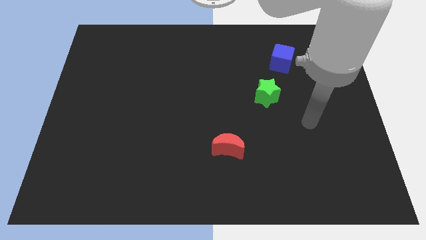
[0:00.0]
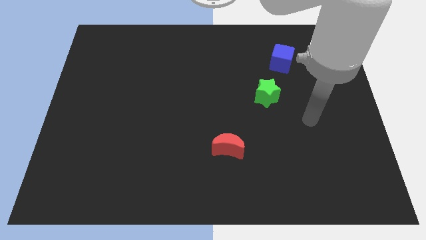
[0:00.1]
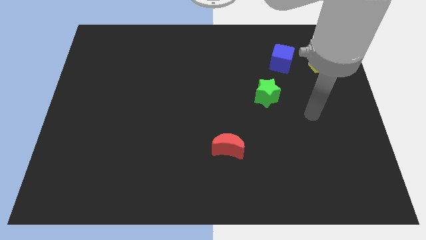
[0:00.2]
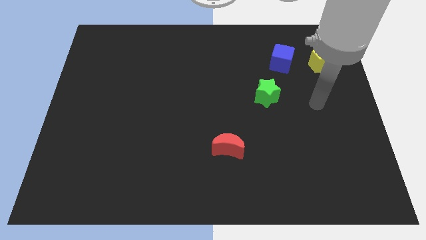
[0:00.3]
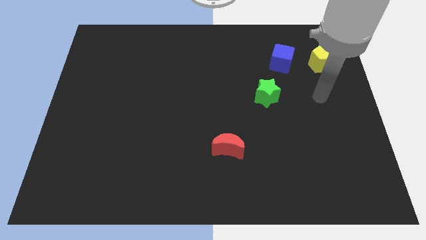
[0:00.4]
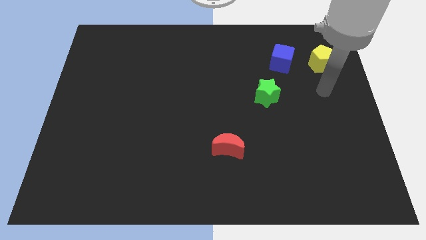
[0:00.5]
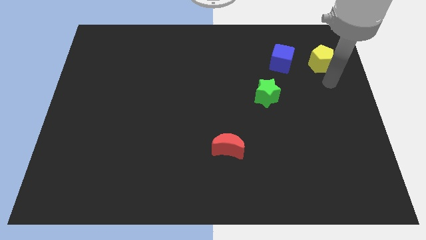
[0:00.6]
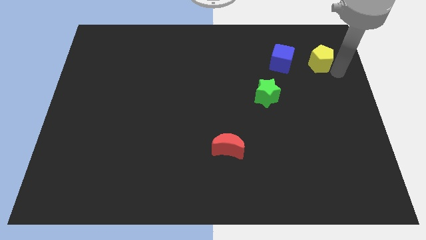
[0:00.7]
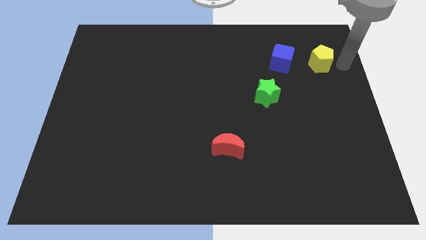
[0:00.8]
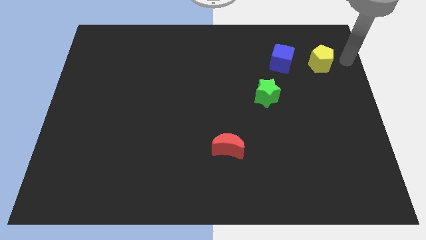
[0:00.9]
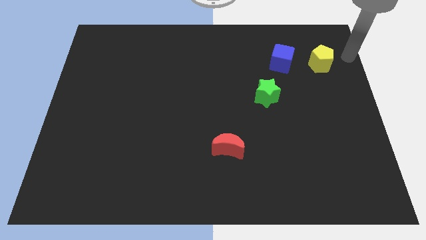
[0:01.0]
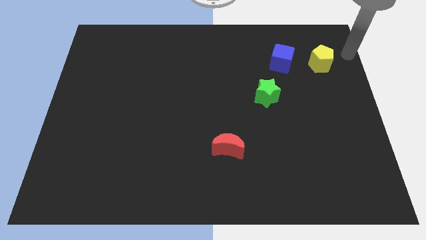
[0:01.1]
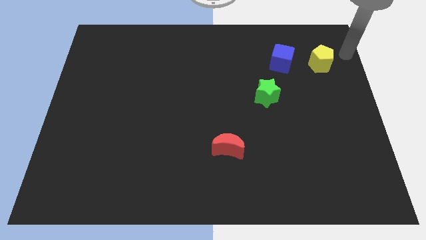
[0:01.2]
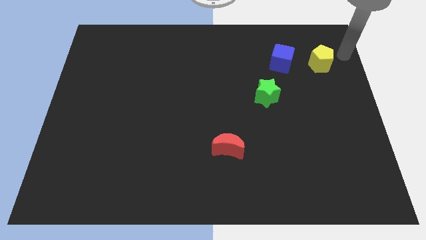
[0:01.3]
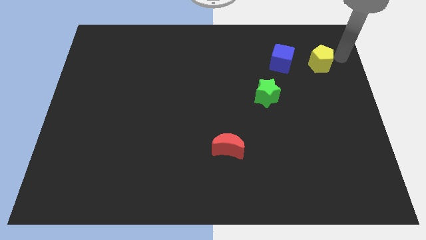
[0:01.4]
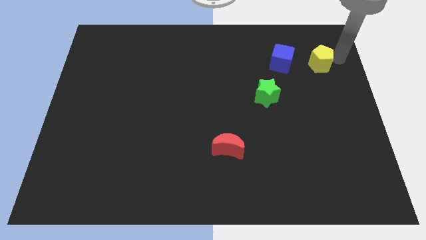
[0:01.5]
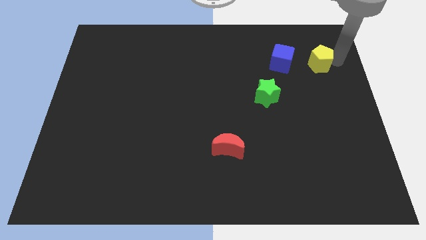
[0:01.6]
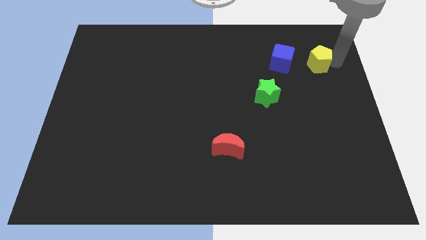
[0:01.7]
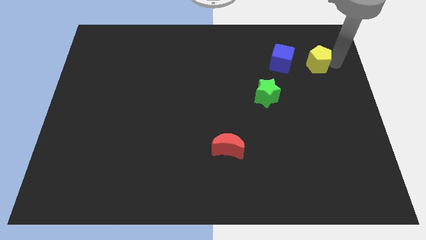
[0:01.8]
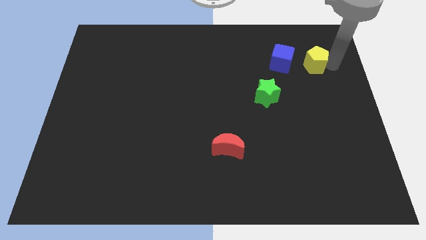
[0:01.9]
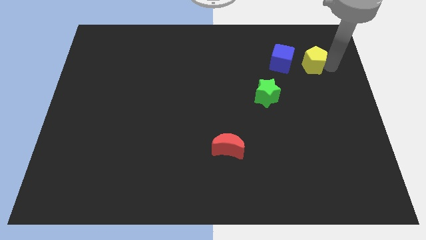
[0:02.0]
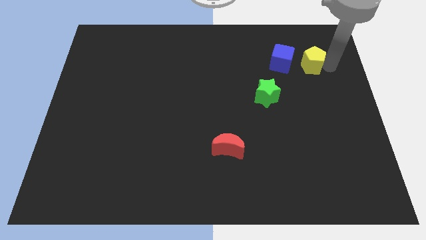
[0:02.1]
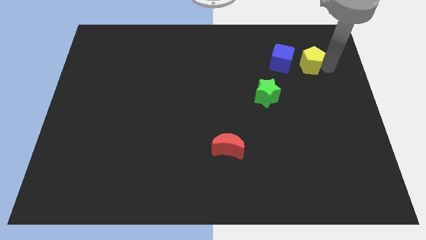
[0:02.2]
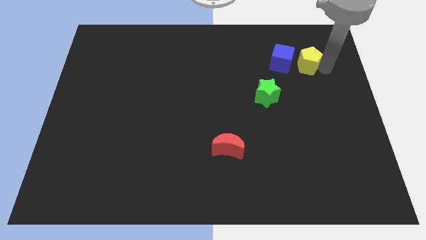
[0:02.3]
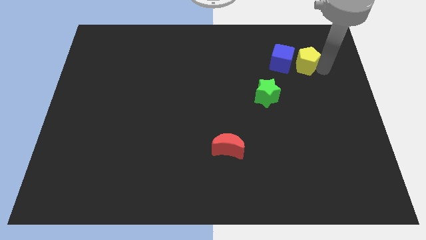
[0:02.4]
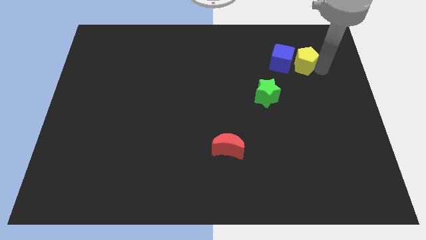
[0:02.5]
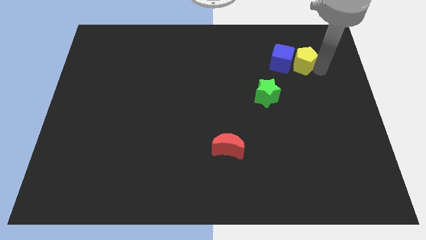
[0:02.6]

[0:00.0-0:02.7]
put the yellow pentagon close to the blue cube

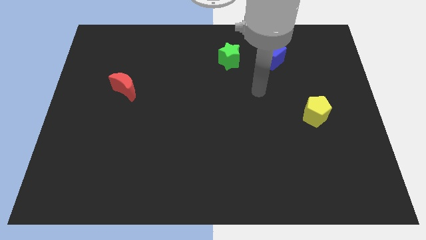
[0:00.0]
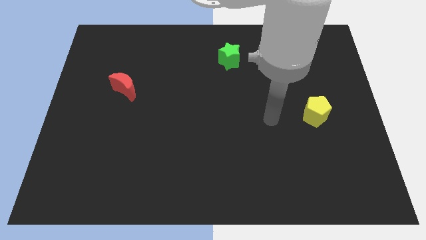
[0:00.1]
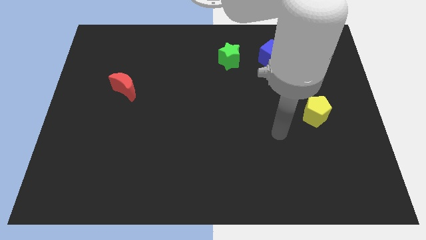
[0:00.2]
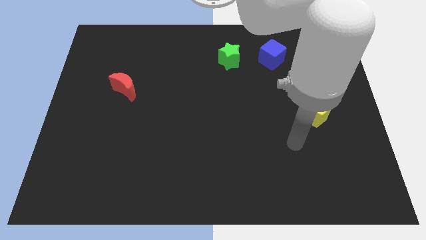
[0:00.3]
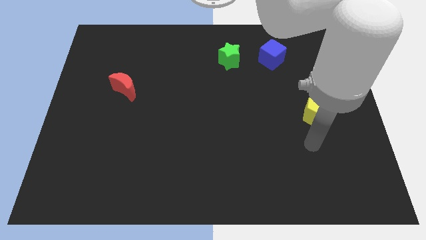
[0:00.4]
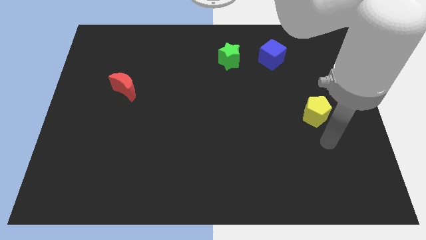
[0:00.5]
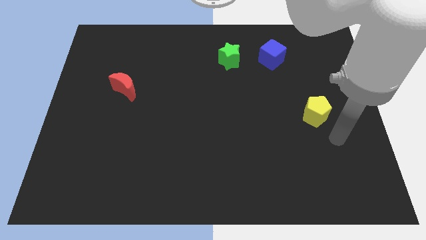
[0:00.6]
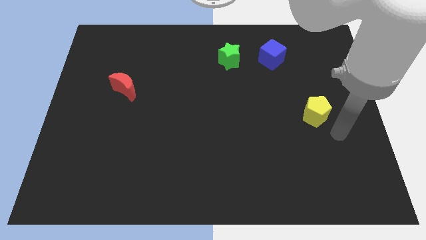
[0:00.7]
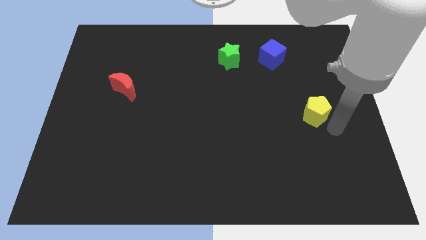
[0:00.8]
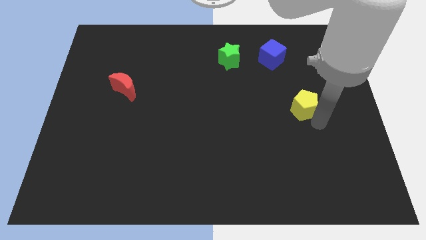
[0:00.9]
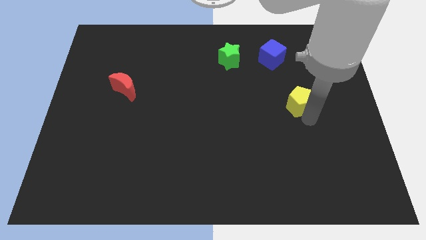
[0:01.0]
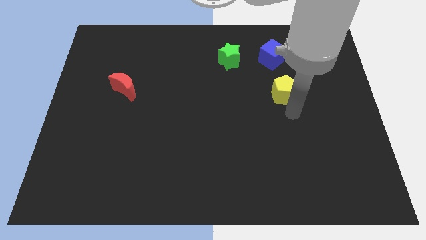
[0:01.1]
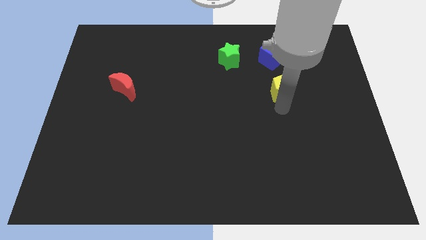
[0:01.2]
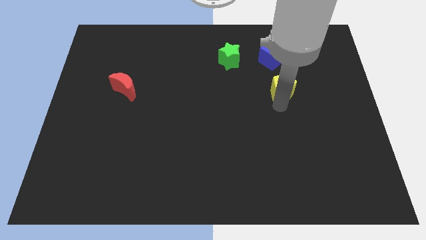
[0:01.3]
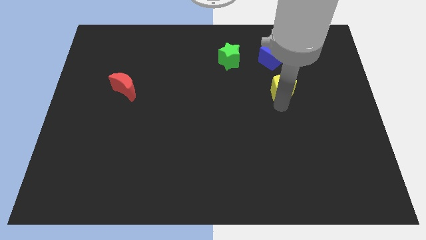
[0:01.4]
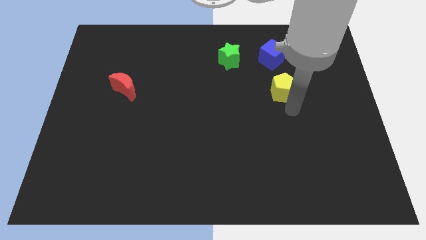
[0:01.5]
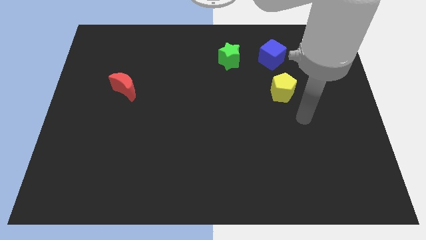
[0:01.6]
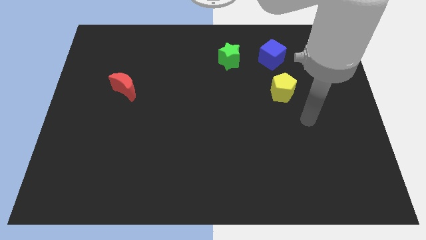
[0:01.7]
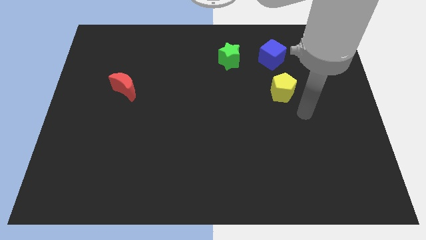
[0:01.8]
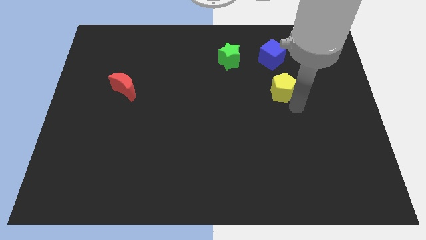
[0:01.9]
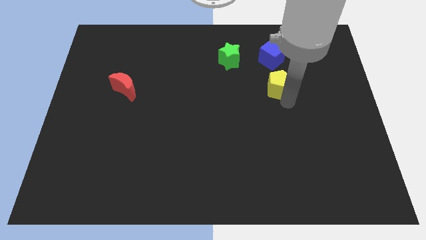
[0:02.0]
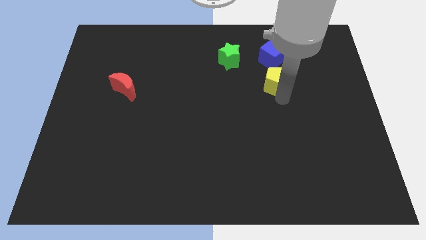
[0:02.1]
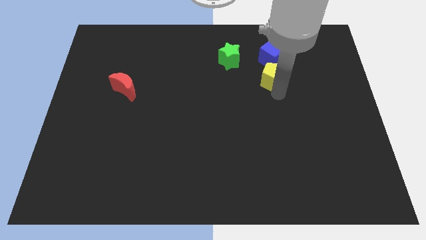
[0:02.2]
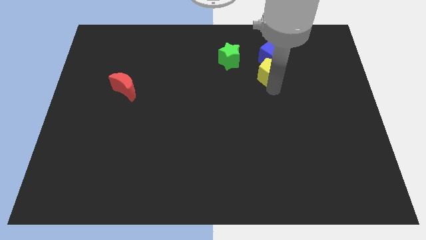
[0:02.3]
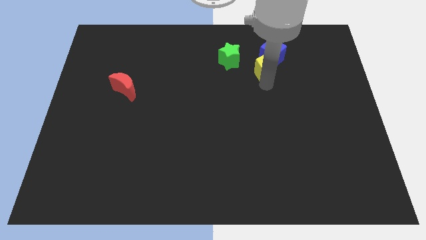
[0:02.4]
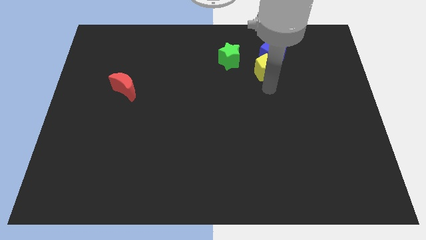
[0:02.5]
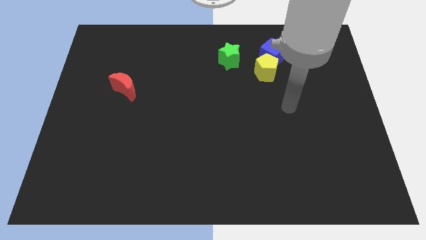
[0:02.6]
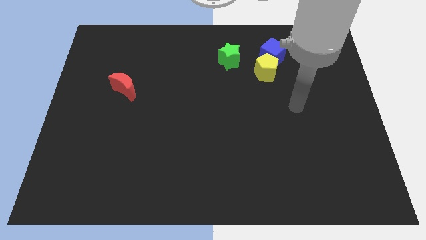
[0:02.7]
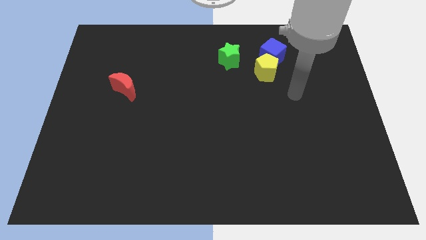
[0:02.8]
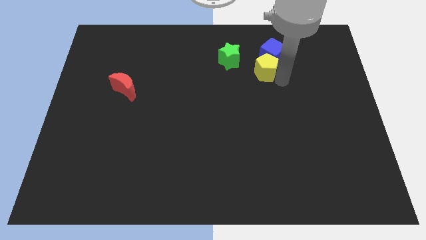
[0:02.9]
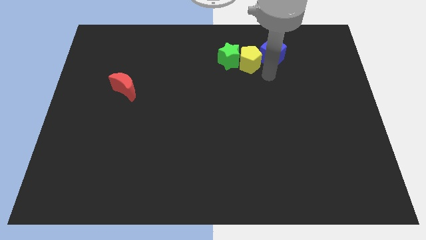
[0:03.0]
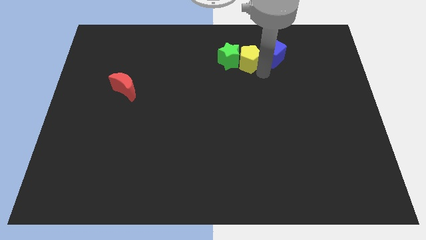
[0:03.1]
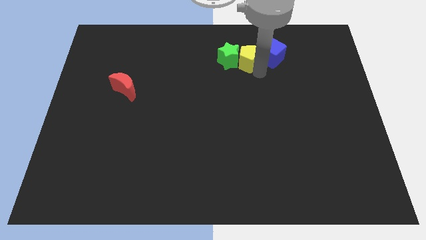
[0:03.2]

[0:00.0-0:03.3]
slide the yellow pentagon close to the green block

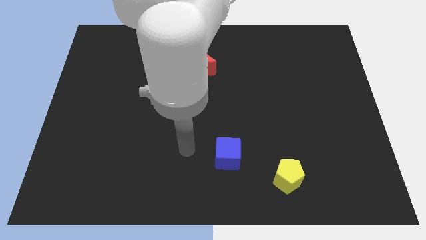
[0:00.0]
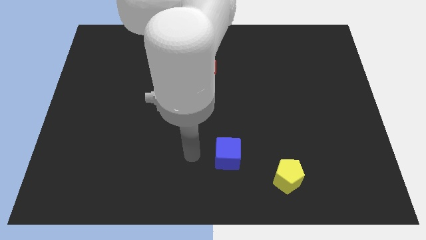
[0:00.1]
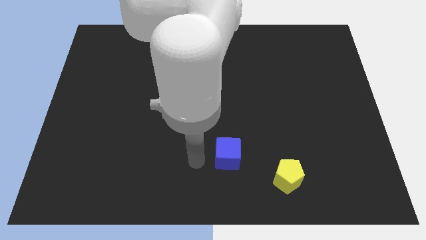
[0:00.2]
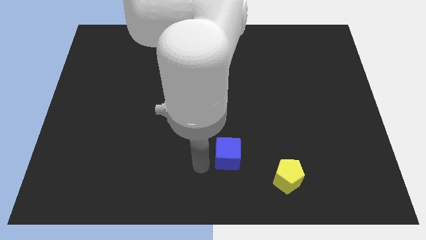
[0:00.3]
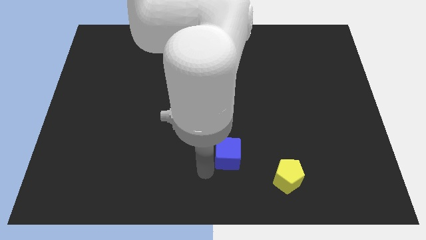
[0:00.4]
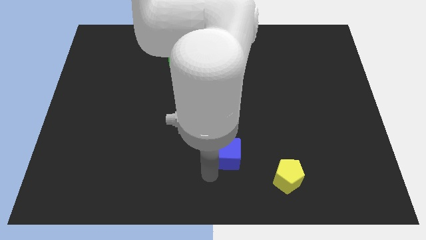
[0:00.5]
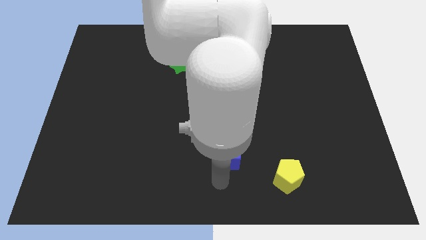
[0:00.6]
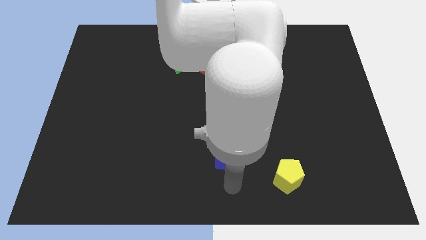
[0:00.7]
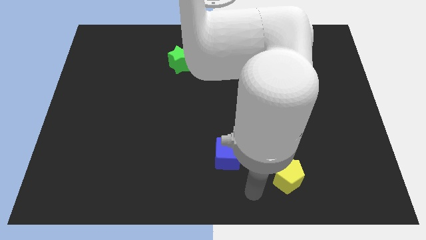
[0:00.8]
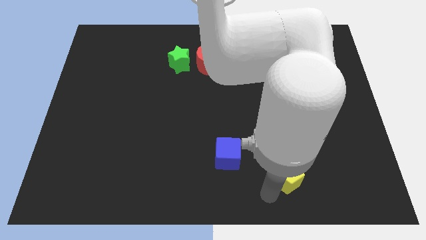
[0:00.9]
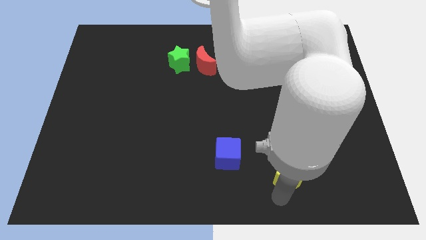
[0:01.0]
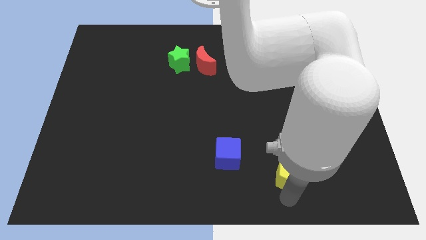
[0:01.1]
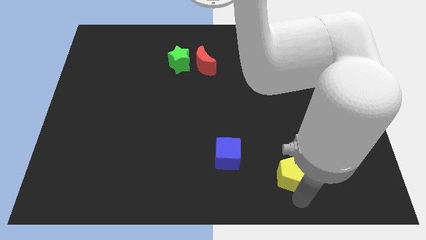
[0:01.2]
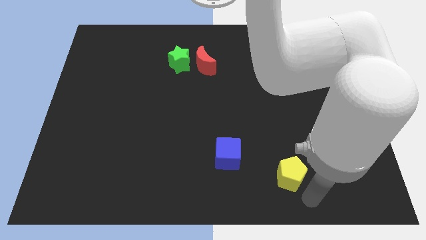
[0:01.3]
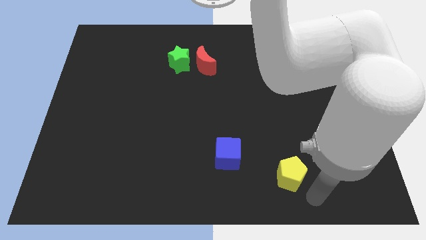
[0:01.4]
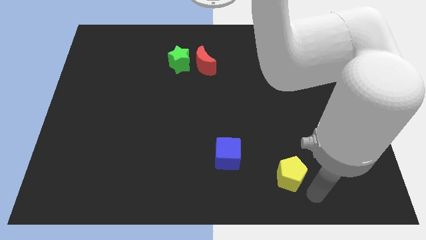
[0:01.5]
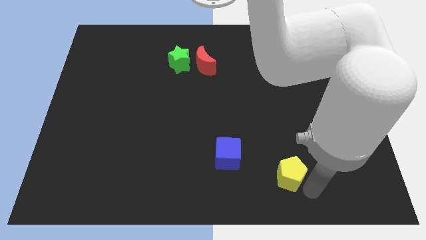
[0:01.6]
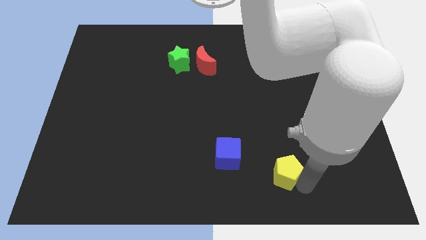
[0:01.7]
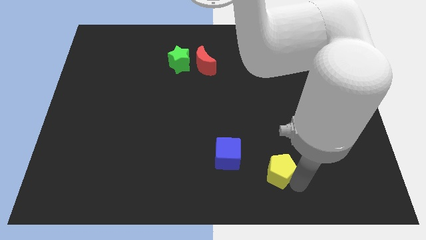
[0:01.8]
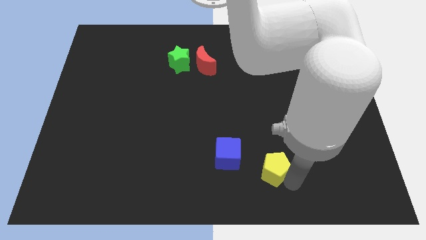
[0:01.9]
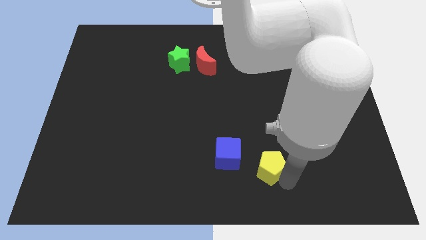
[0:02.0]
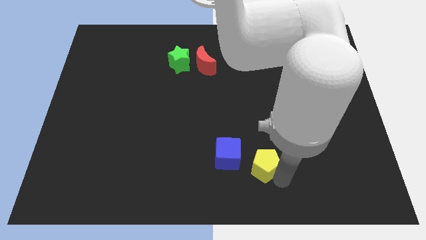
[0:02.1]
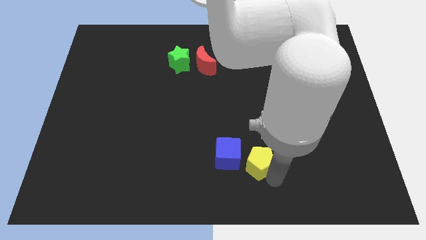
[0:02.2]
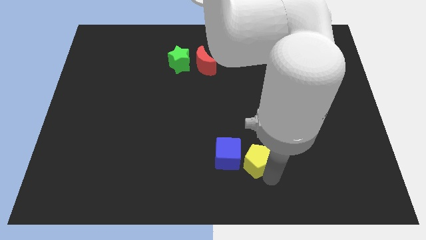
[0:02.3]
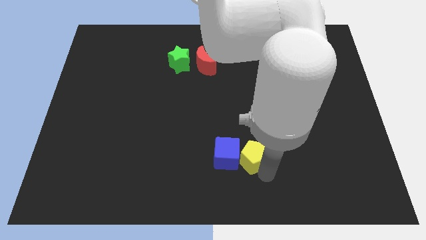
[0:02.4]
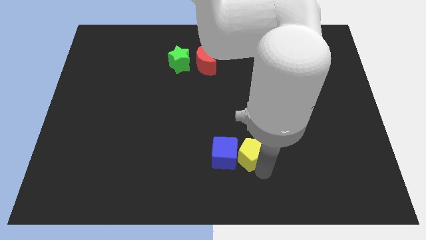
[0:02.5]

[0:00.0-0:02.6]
push the yellow block towards the blue block
